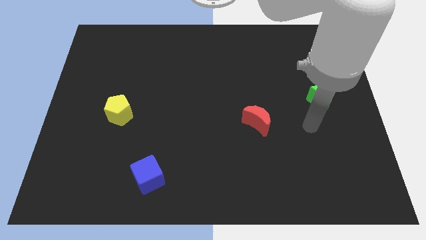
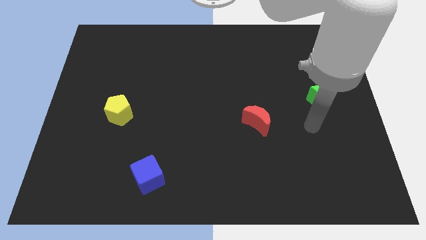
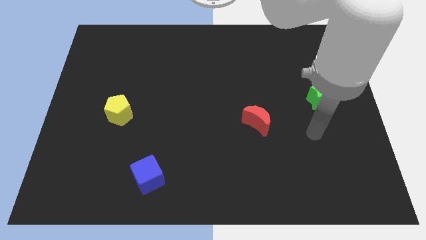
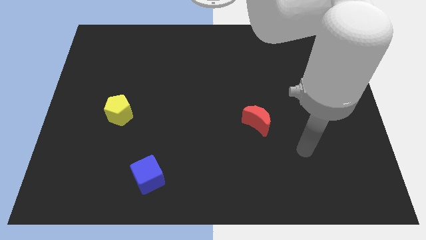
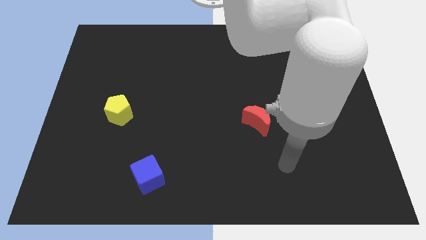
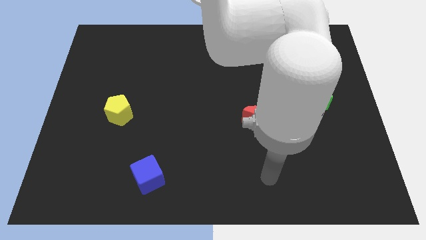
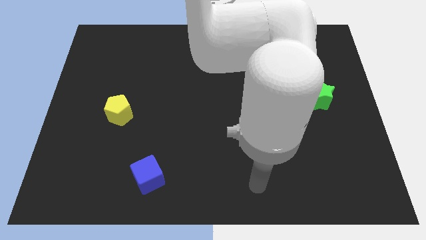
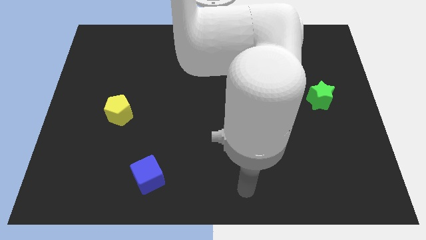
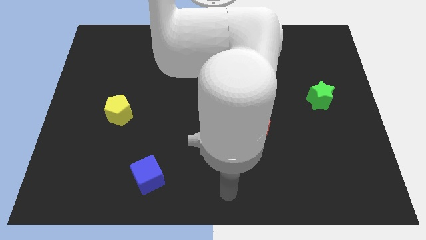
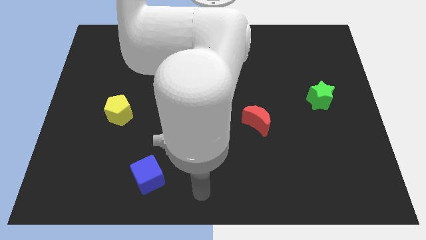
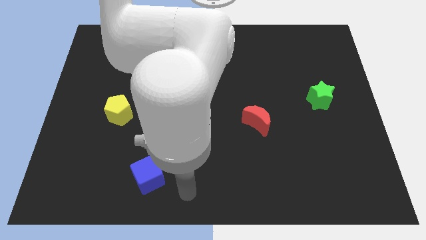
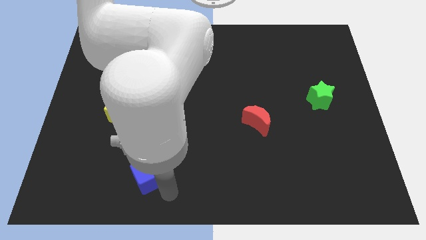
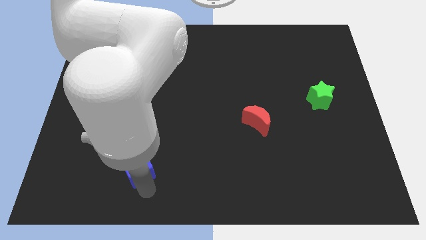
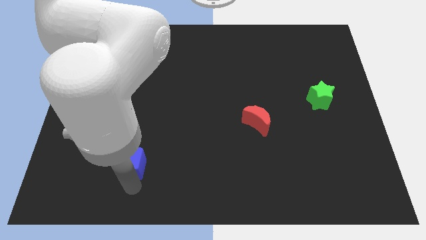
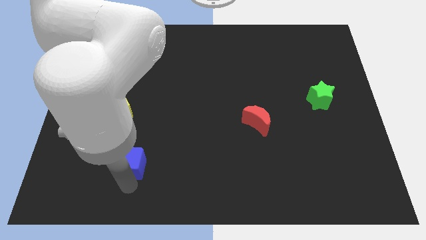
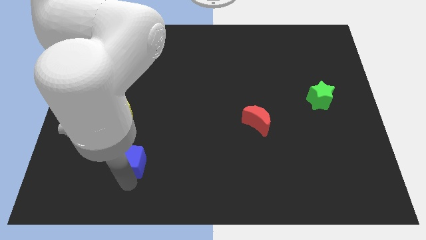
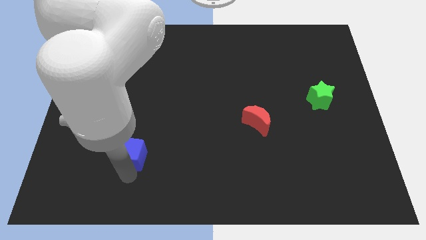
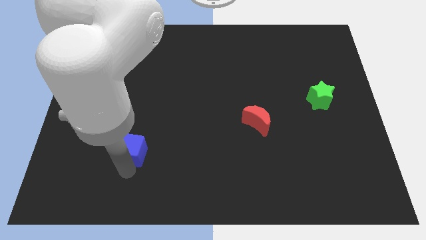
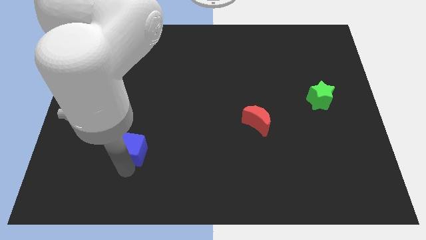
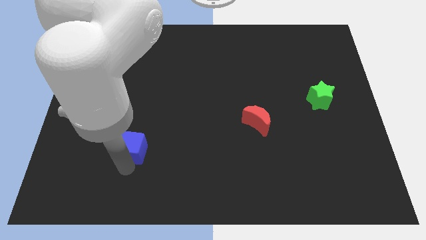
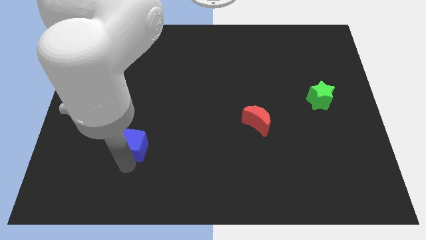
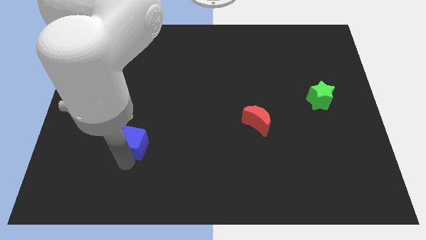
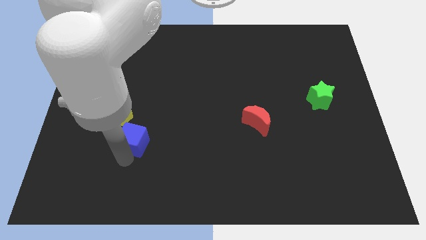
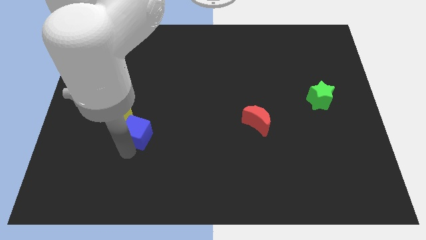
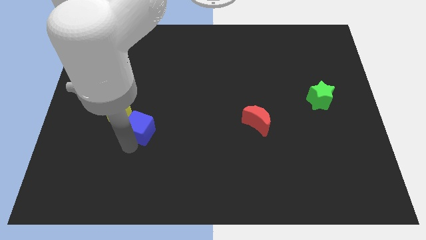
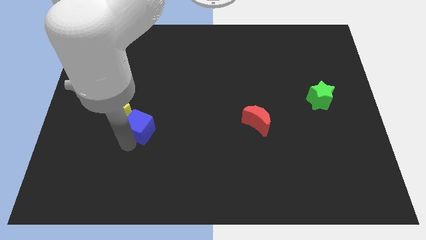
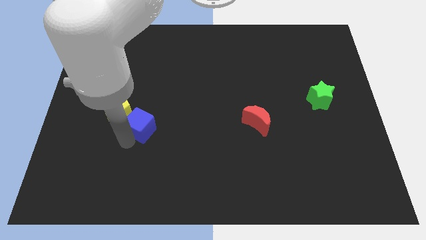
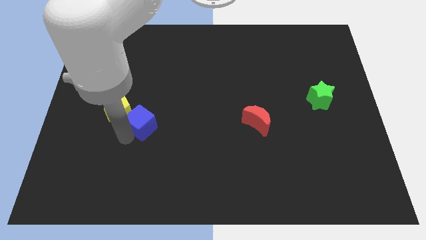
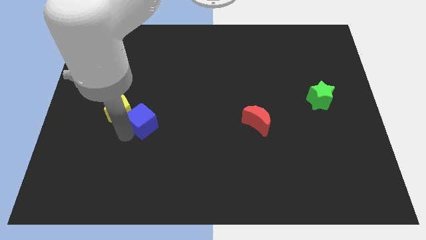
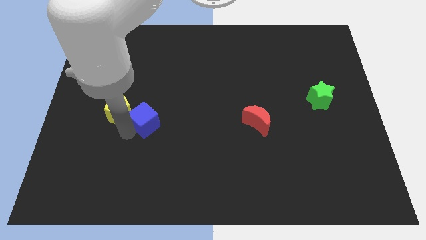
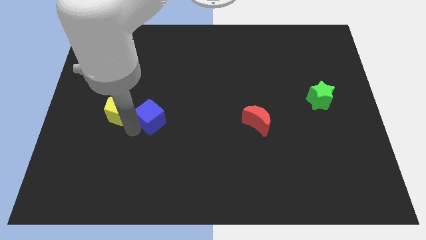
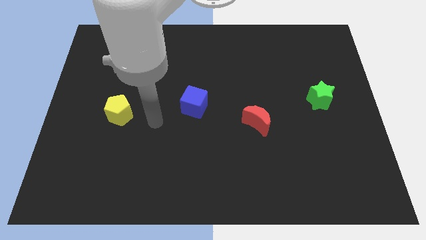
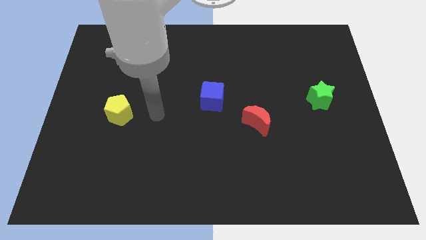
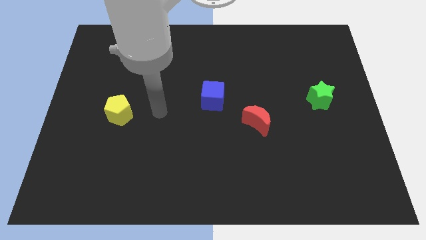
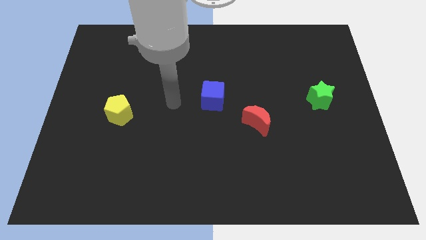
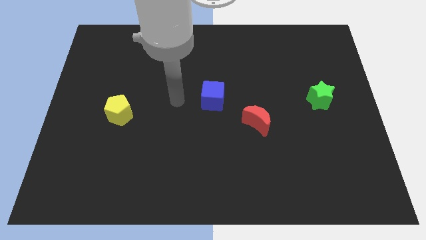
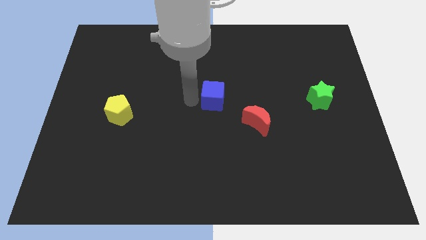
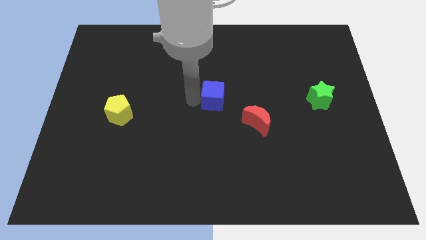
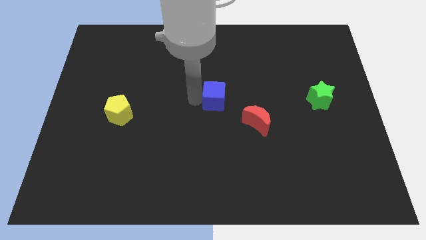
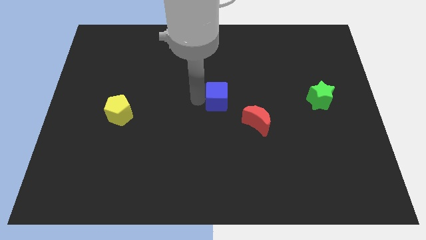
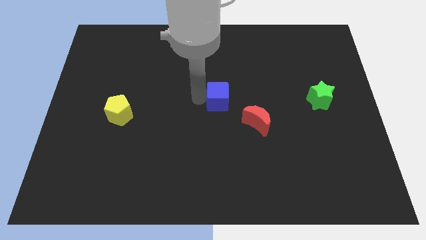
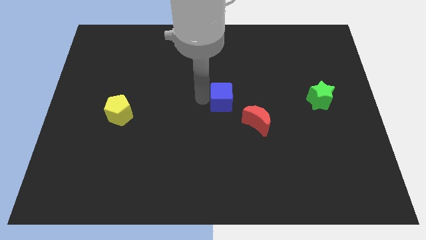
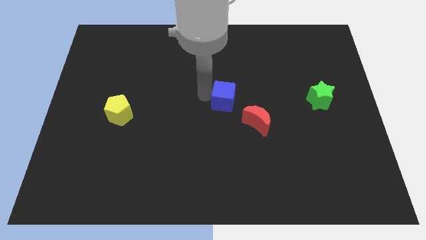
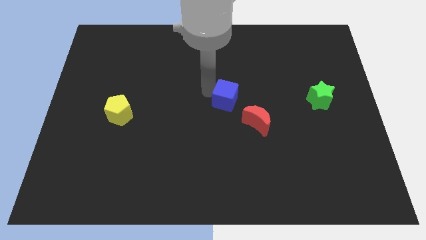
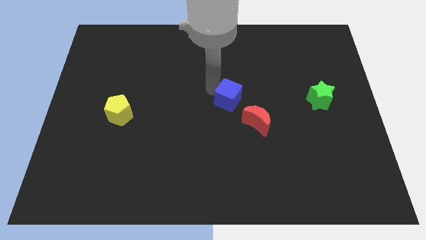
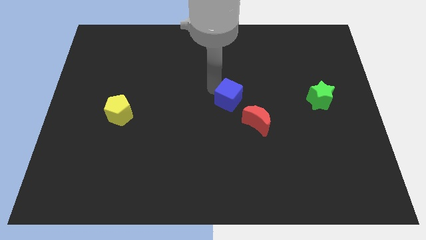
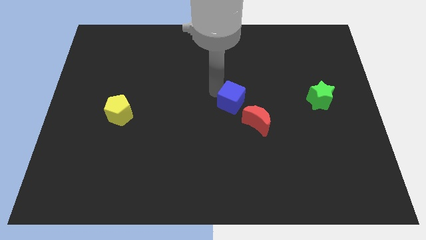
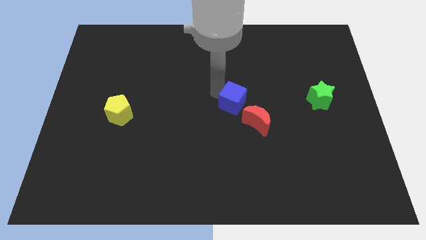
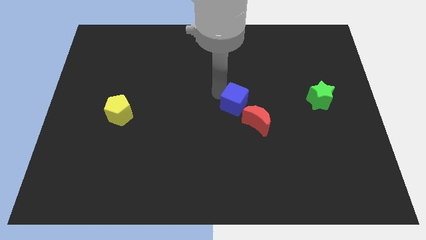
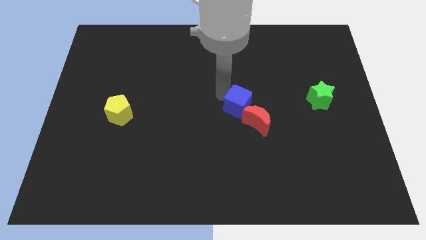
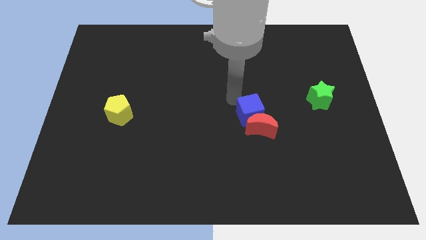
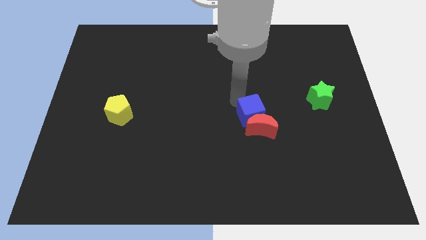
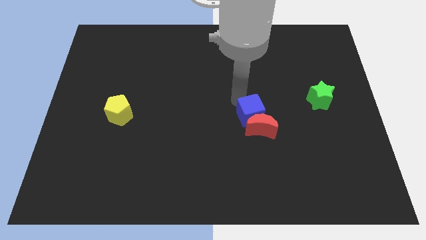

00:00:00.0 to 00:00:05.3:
move the cube to the red block

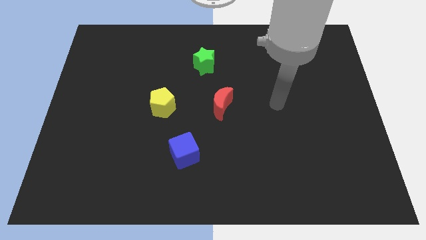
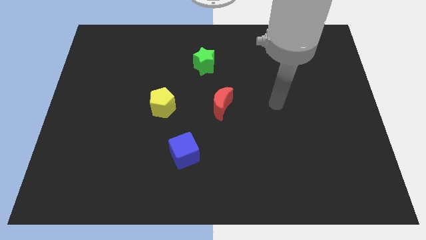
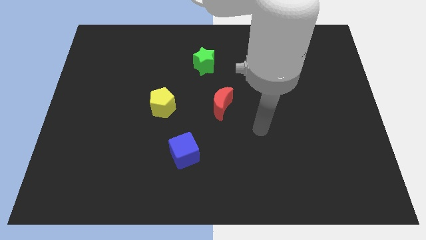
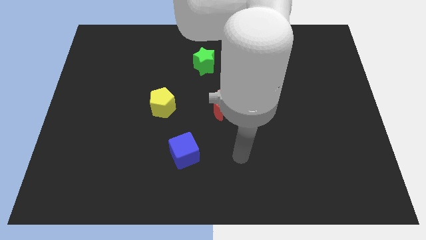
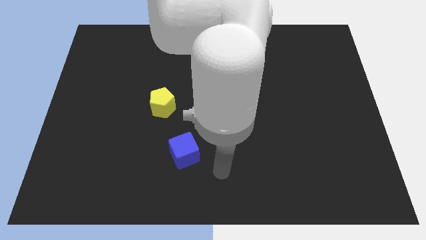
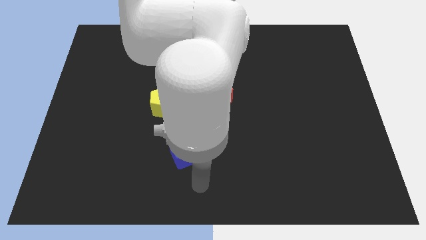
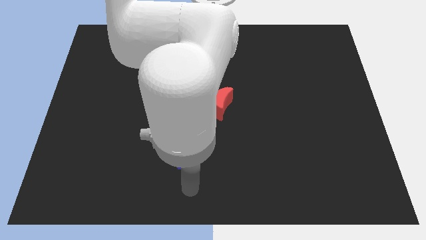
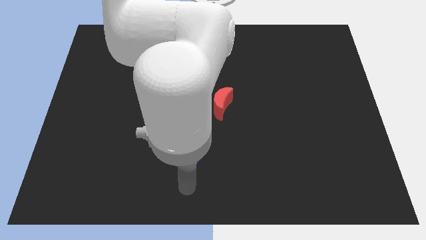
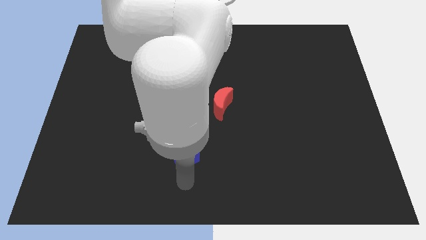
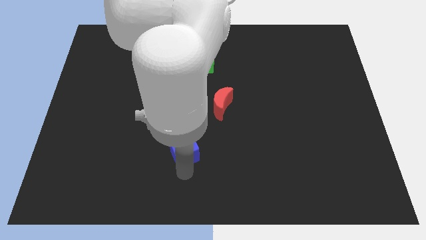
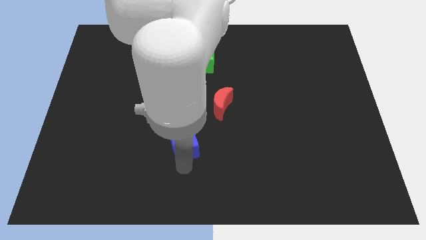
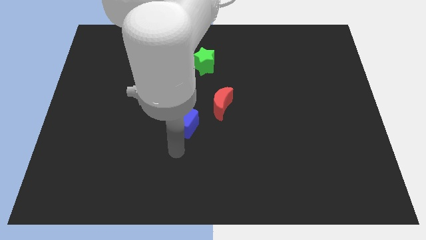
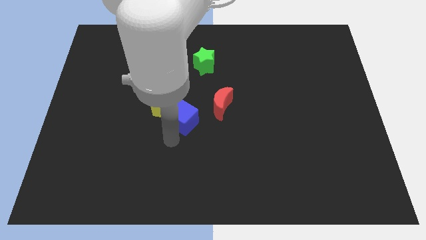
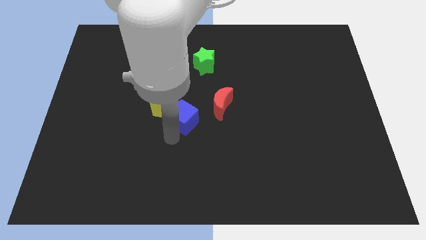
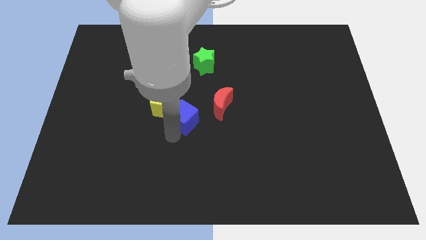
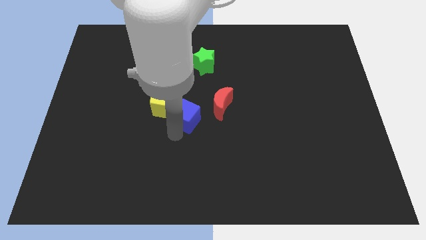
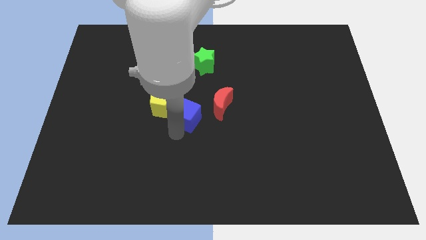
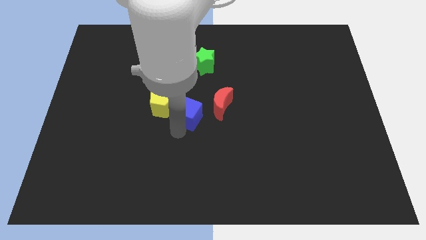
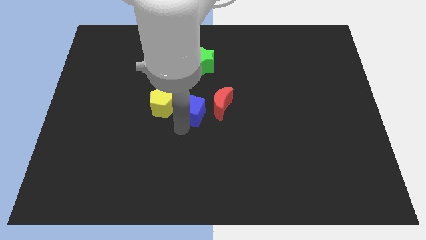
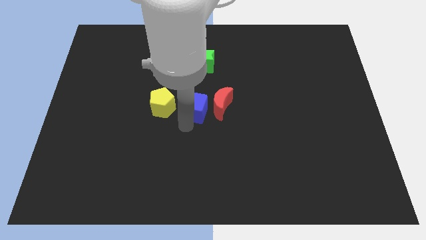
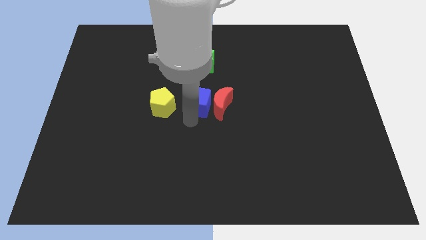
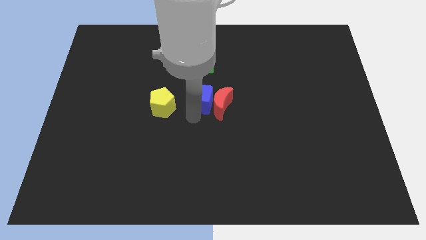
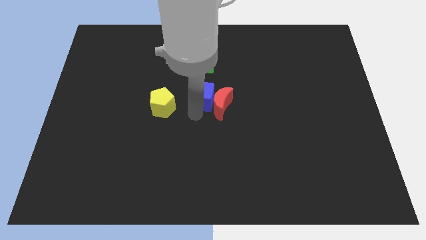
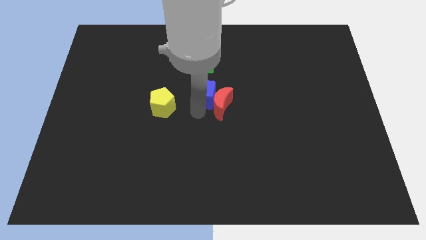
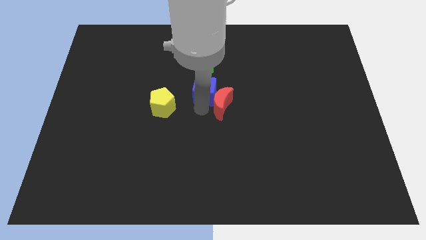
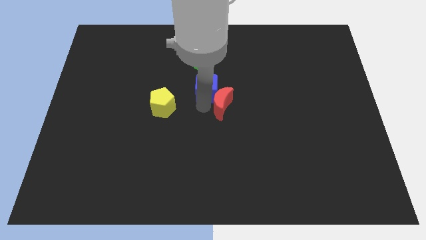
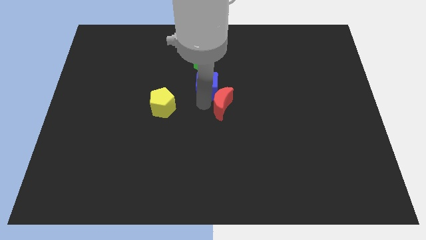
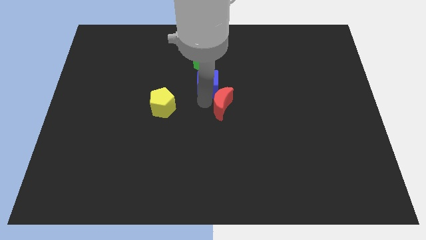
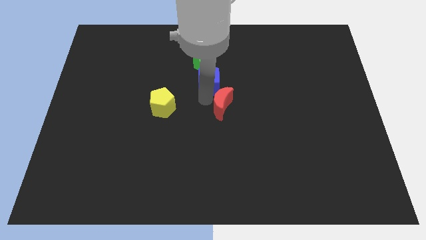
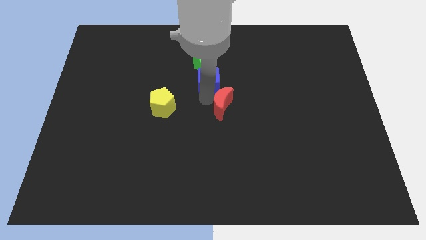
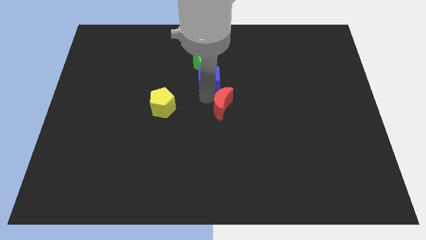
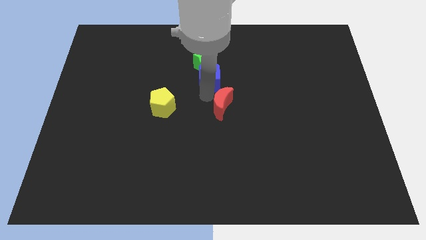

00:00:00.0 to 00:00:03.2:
slide the blue cube close to the green block

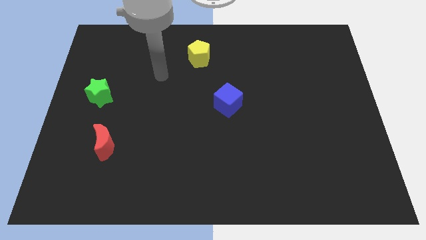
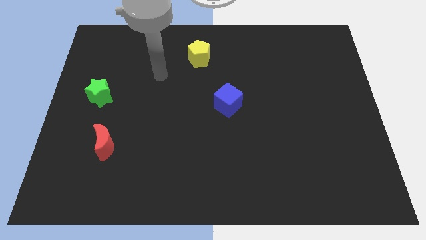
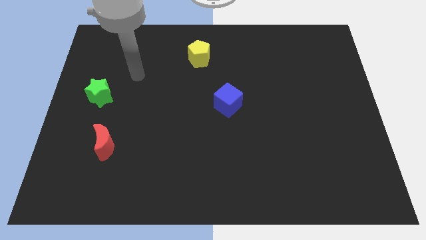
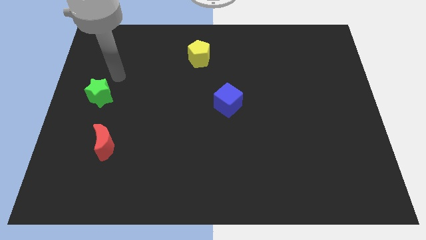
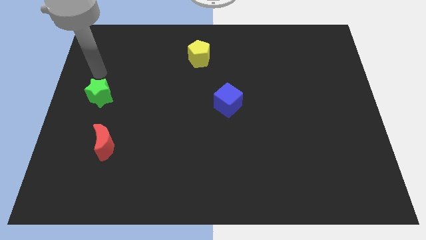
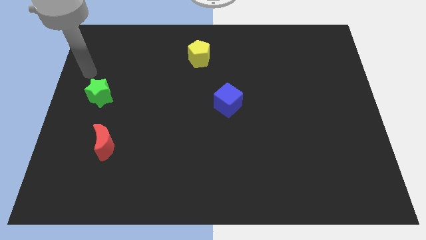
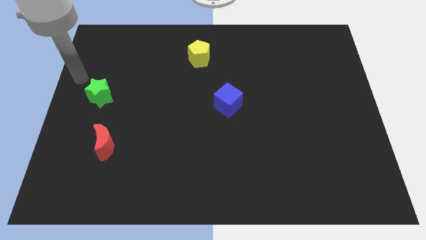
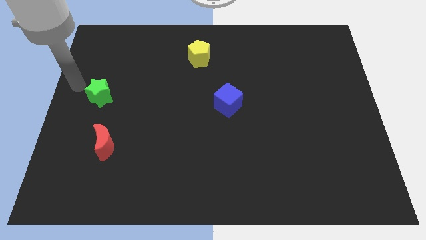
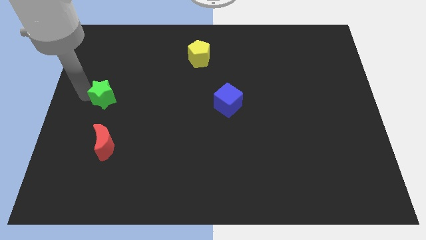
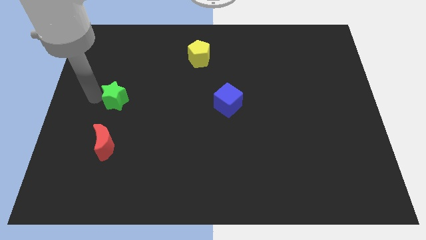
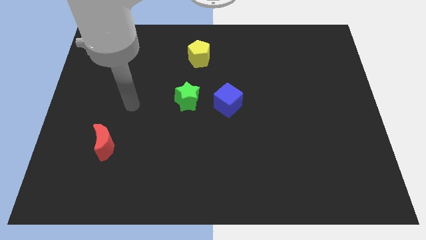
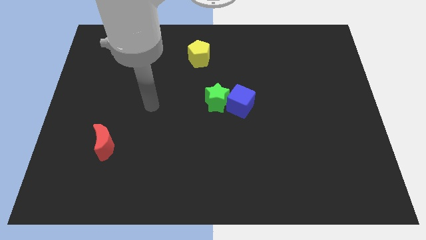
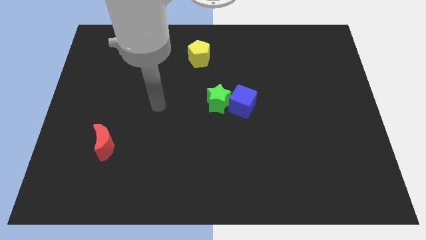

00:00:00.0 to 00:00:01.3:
slide the star to the blue block
